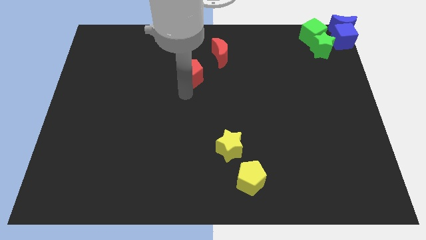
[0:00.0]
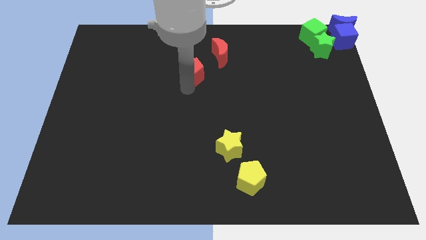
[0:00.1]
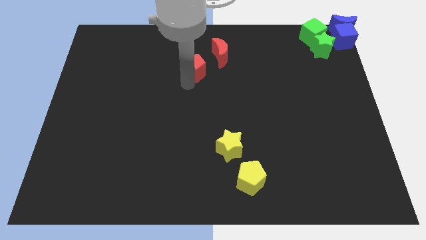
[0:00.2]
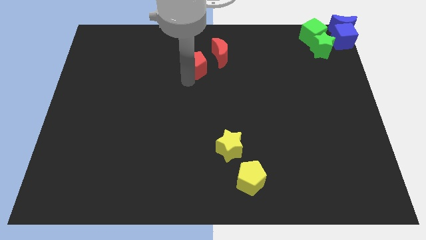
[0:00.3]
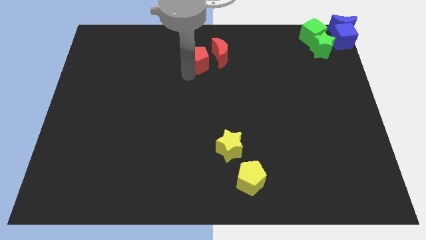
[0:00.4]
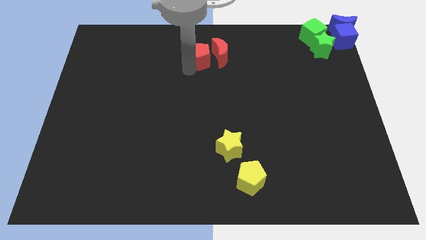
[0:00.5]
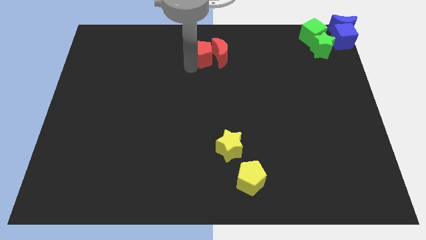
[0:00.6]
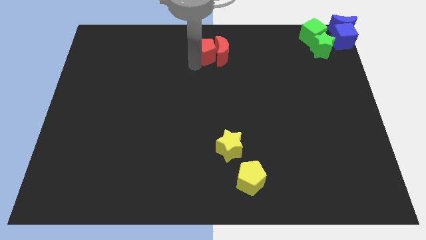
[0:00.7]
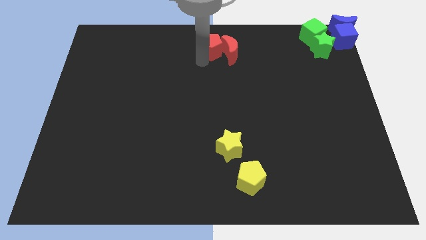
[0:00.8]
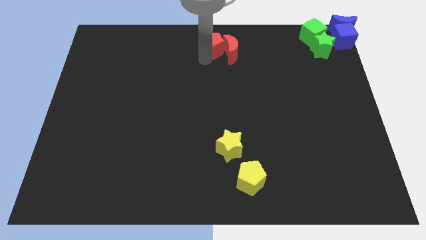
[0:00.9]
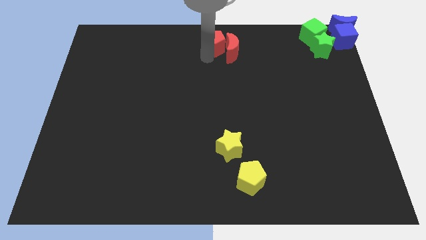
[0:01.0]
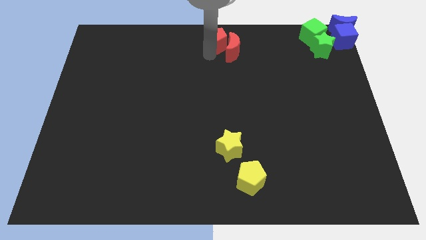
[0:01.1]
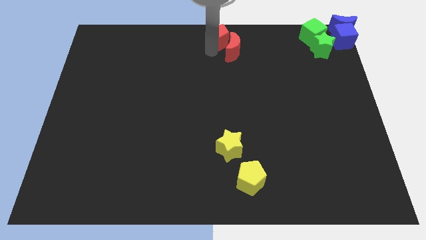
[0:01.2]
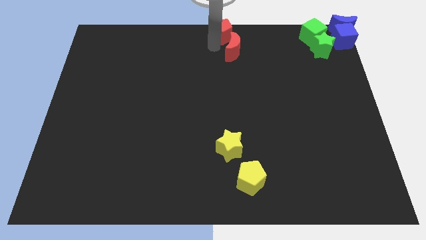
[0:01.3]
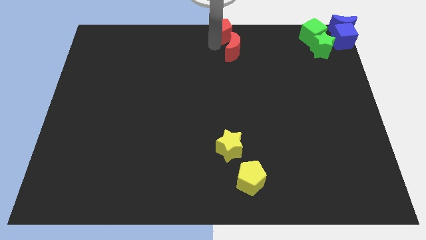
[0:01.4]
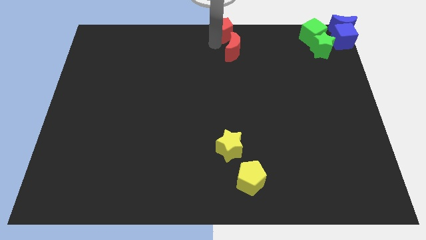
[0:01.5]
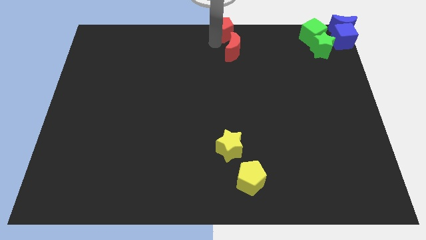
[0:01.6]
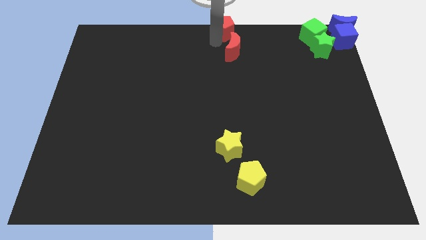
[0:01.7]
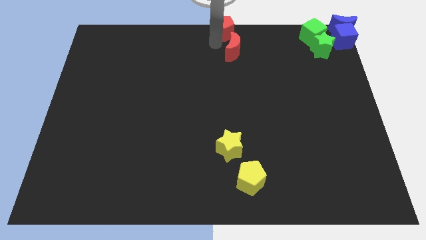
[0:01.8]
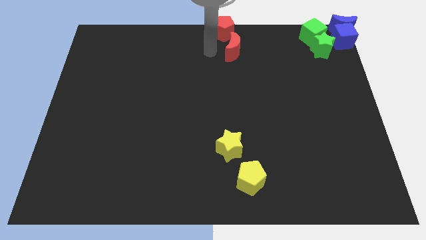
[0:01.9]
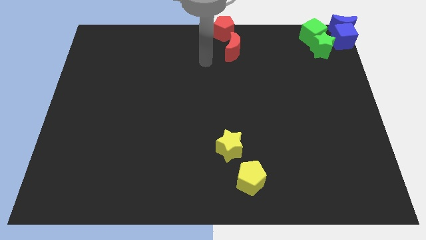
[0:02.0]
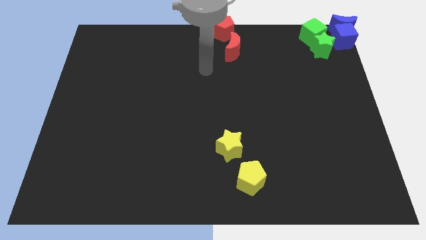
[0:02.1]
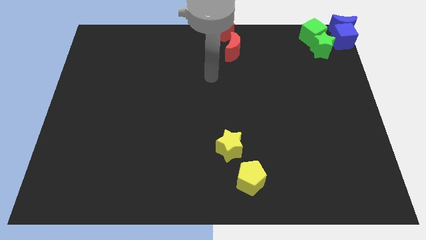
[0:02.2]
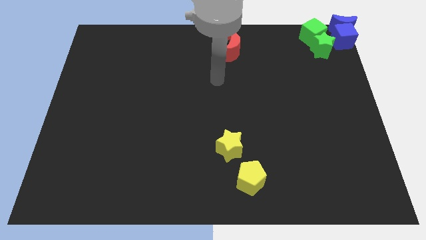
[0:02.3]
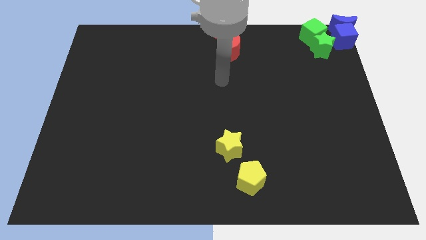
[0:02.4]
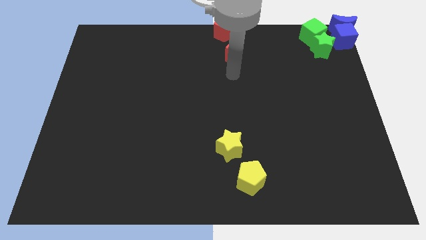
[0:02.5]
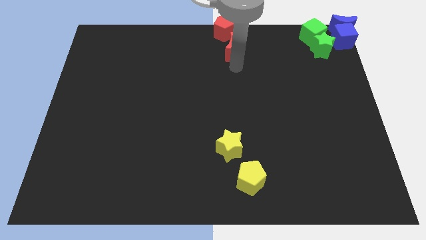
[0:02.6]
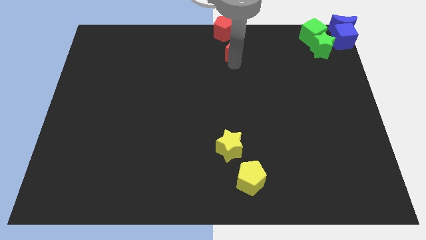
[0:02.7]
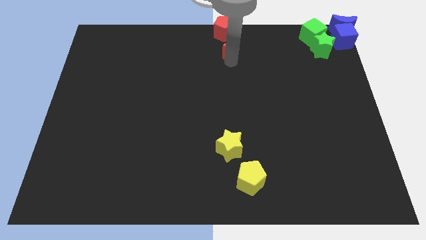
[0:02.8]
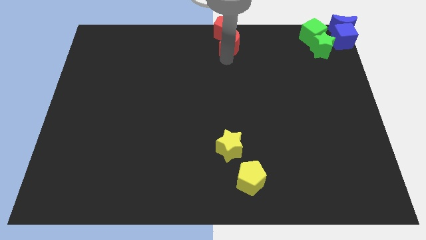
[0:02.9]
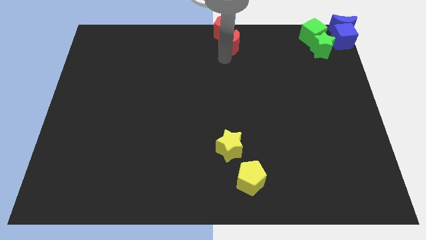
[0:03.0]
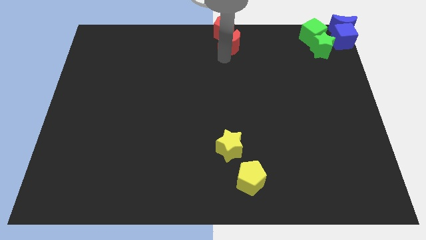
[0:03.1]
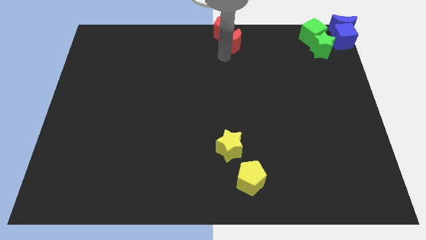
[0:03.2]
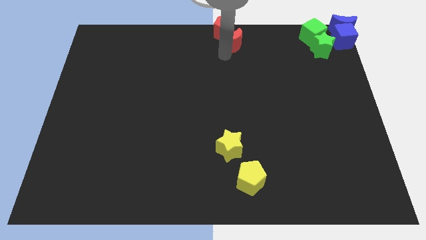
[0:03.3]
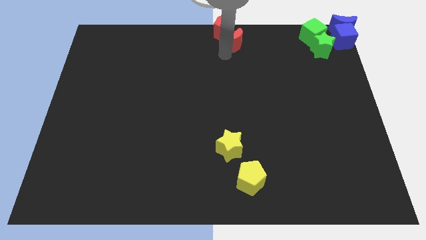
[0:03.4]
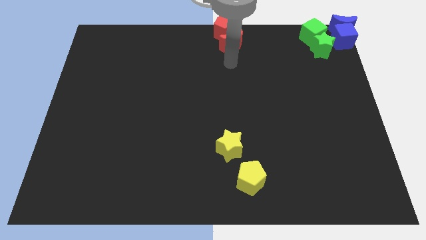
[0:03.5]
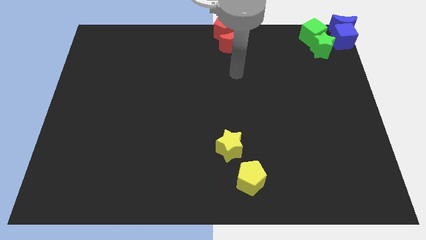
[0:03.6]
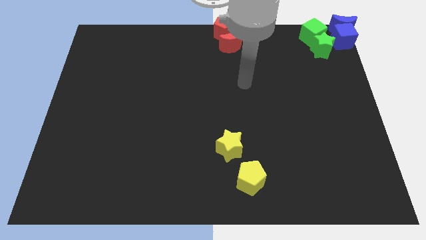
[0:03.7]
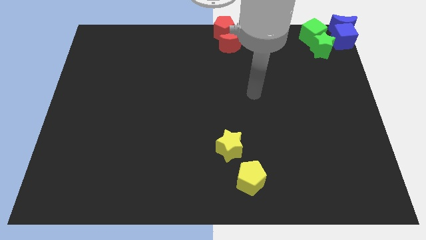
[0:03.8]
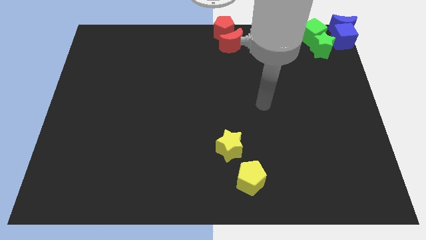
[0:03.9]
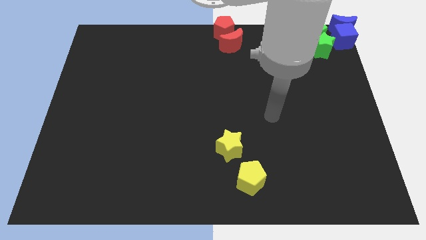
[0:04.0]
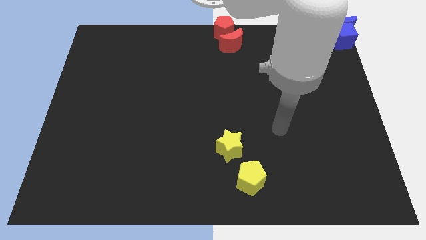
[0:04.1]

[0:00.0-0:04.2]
place the red blocks at the top center of the board

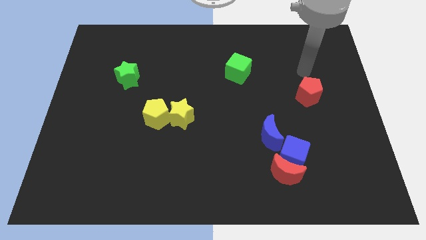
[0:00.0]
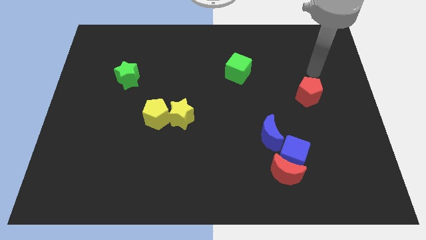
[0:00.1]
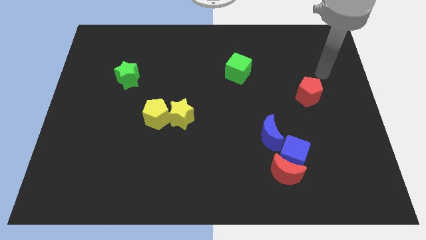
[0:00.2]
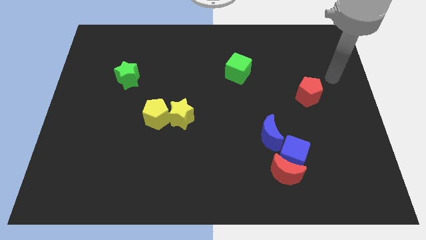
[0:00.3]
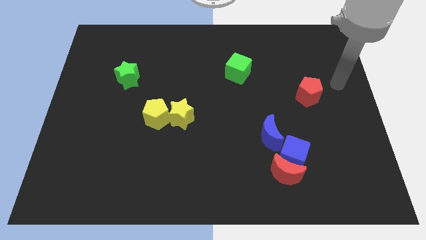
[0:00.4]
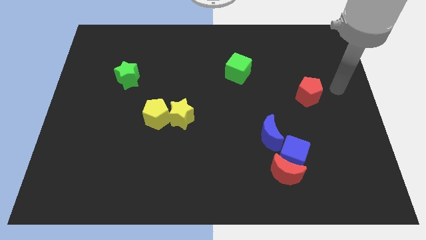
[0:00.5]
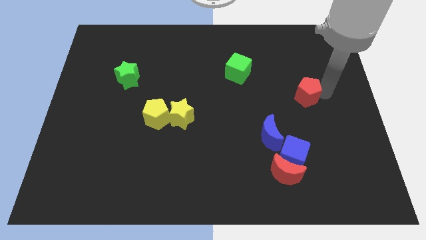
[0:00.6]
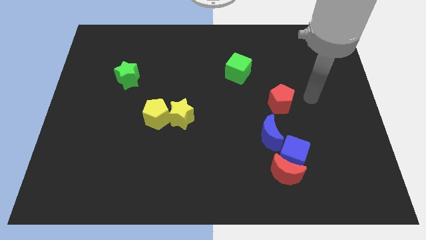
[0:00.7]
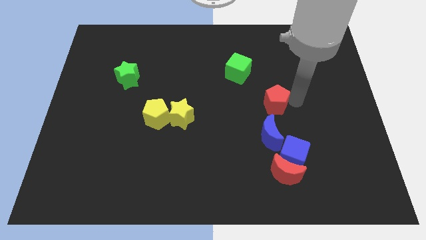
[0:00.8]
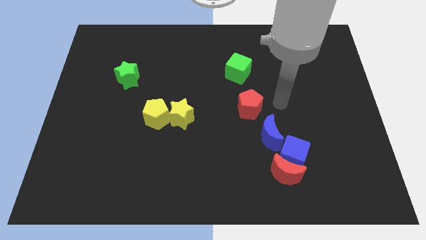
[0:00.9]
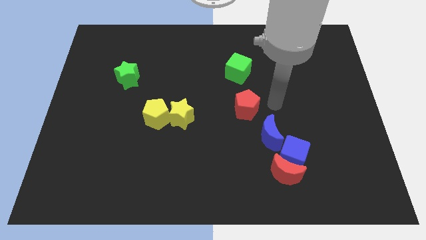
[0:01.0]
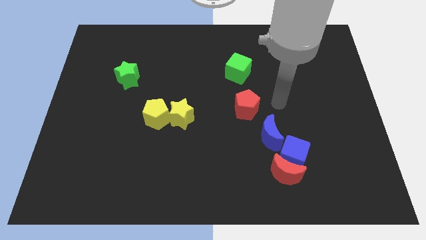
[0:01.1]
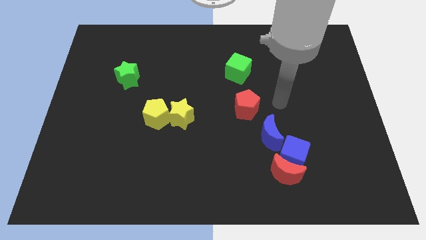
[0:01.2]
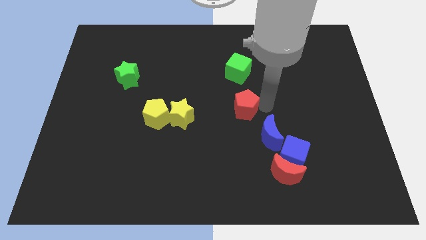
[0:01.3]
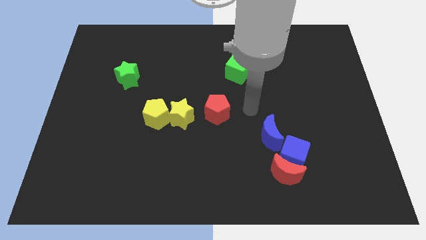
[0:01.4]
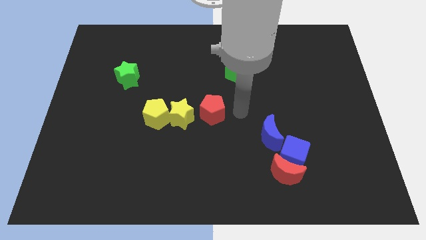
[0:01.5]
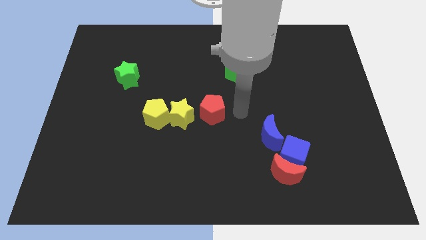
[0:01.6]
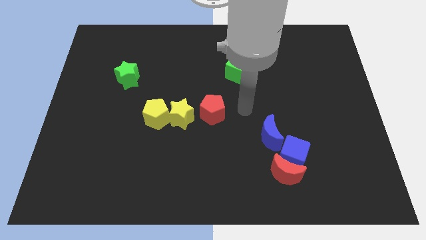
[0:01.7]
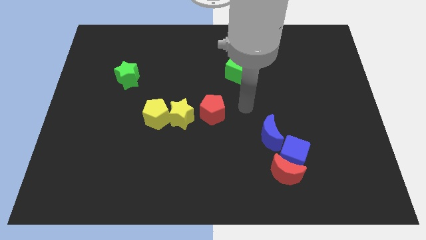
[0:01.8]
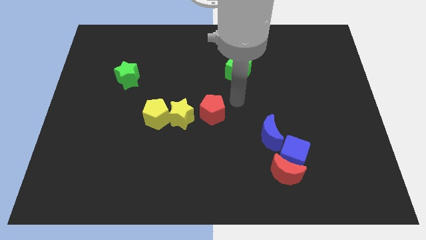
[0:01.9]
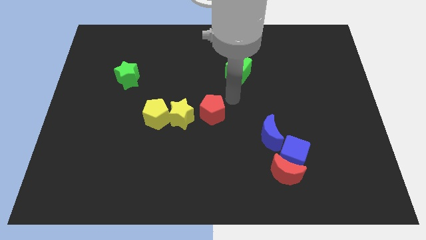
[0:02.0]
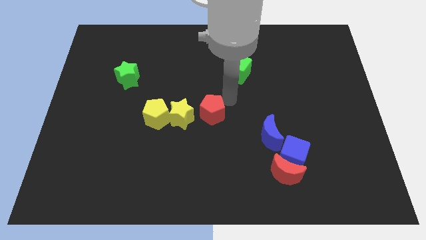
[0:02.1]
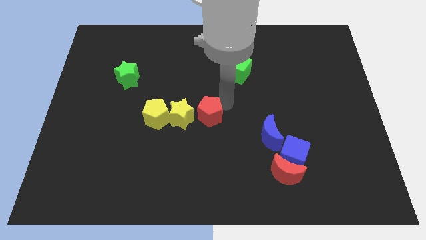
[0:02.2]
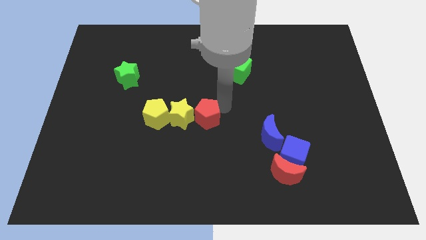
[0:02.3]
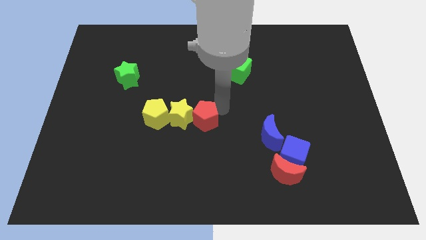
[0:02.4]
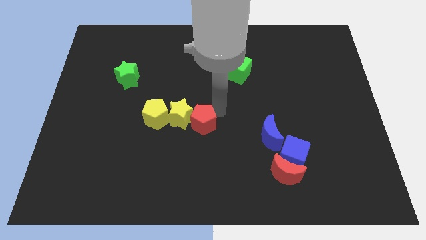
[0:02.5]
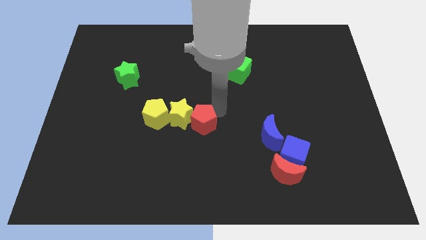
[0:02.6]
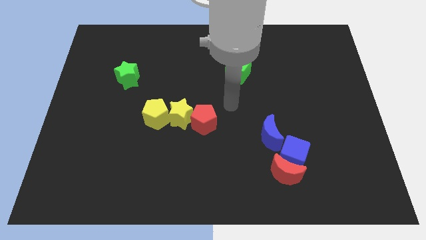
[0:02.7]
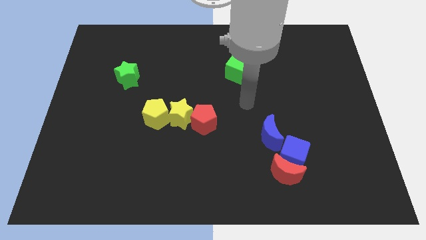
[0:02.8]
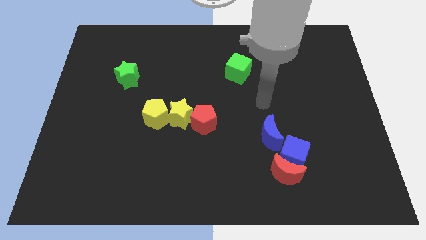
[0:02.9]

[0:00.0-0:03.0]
push the red pentagon right to the yellow star

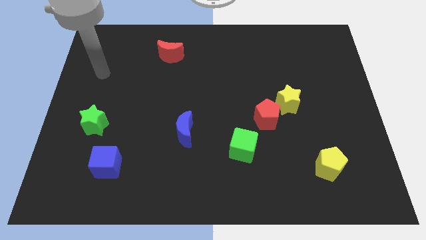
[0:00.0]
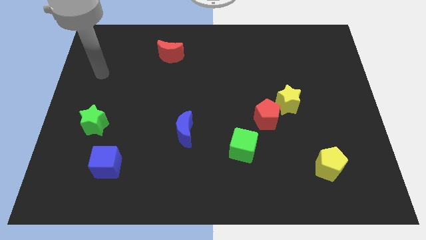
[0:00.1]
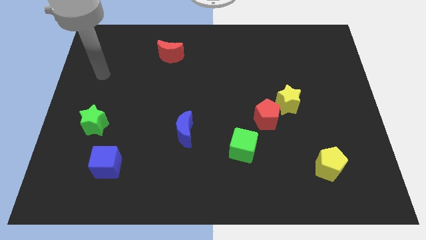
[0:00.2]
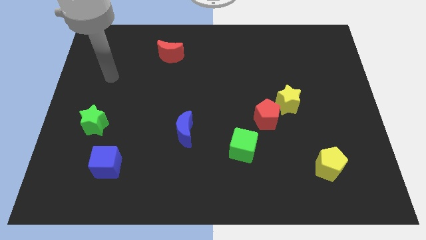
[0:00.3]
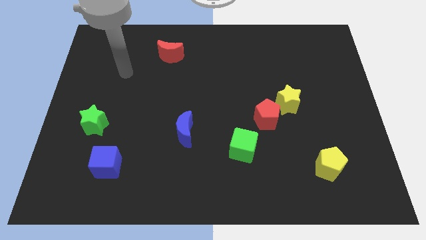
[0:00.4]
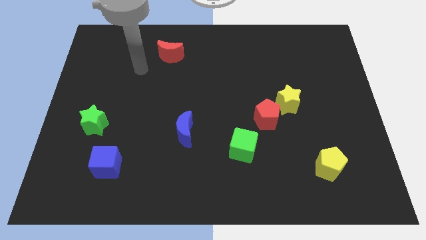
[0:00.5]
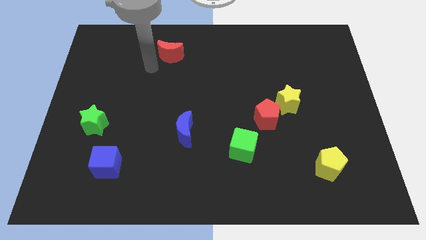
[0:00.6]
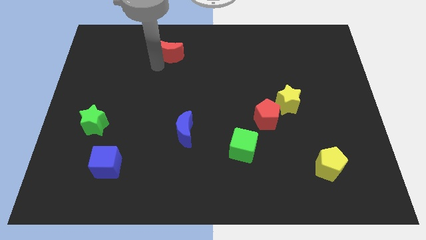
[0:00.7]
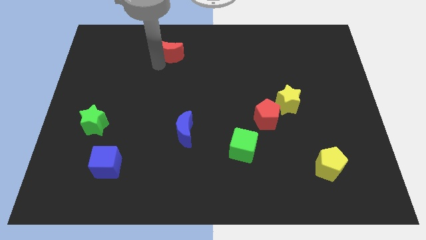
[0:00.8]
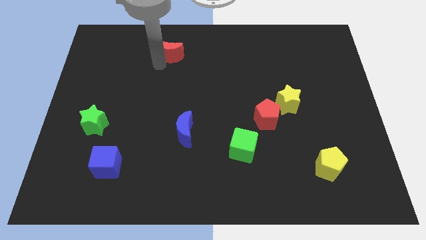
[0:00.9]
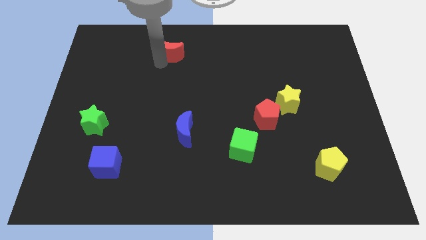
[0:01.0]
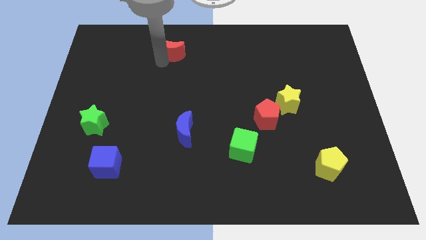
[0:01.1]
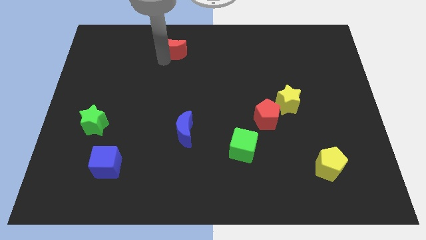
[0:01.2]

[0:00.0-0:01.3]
touch the bottom of red moon

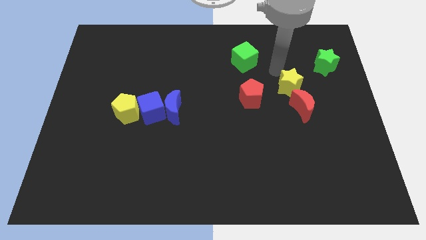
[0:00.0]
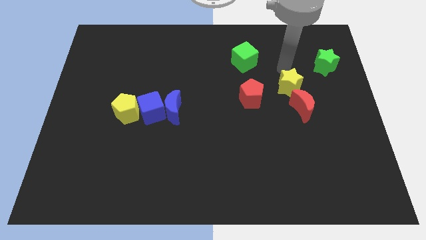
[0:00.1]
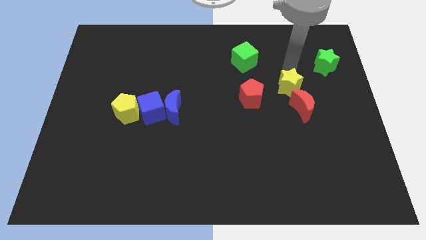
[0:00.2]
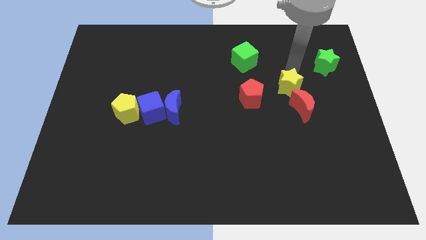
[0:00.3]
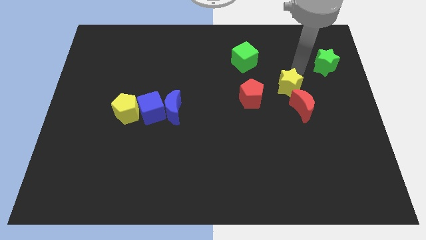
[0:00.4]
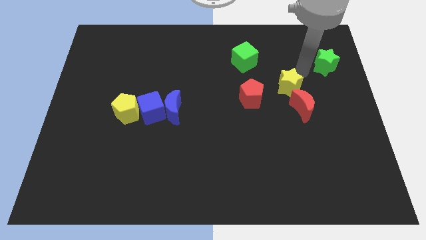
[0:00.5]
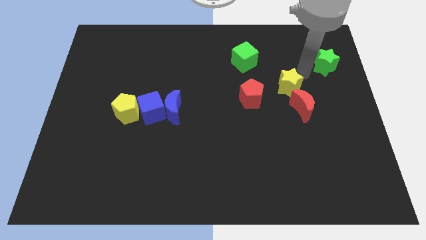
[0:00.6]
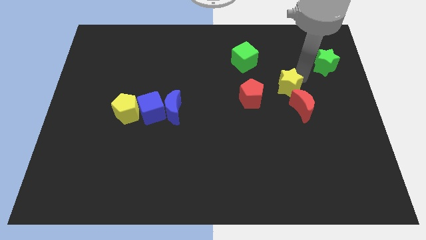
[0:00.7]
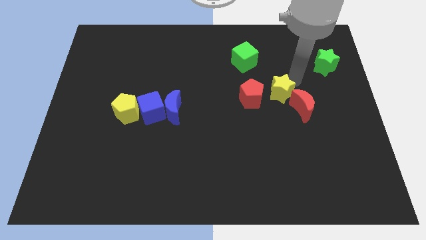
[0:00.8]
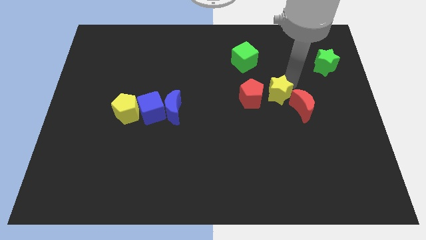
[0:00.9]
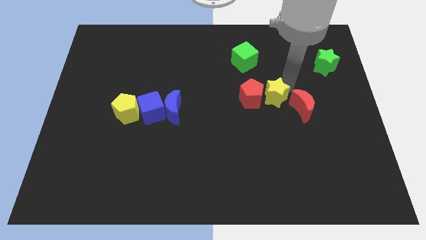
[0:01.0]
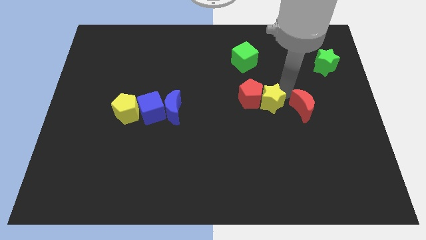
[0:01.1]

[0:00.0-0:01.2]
place the yellow star in between the red pentagon and red crescent
